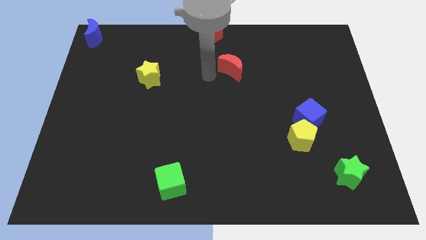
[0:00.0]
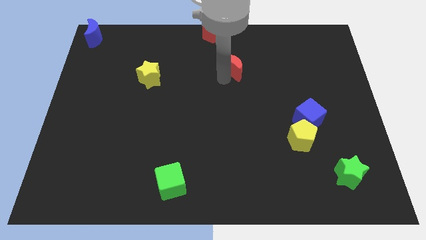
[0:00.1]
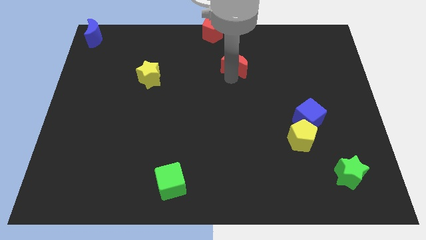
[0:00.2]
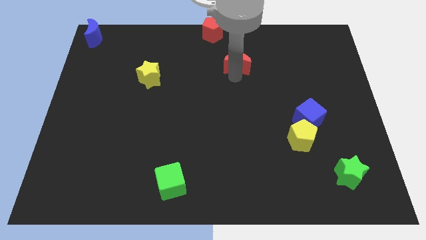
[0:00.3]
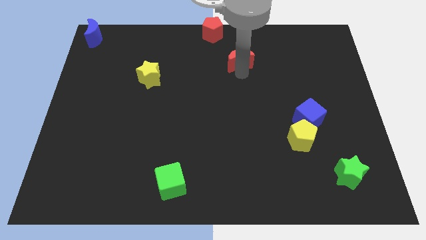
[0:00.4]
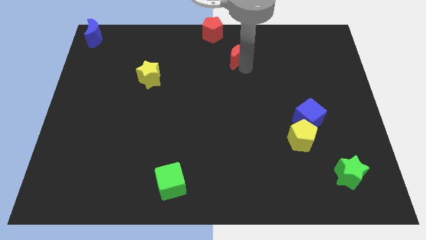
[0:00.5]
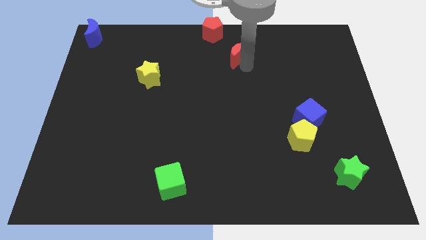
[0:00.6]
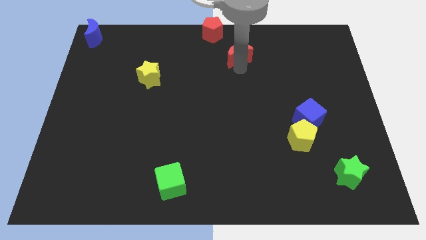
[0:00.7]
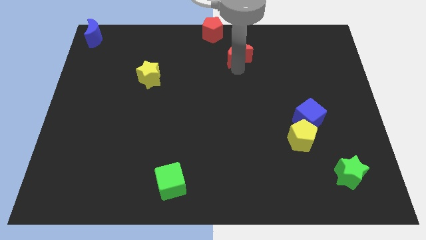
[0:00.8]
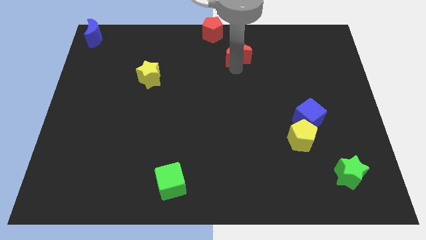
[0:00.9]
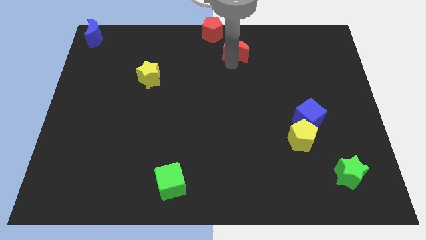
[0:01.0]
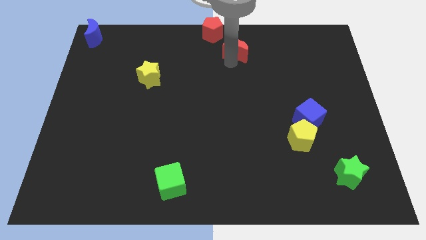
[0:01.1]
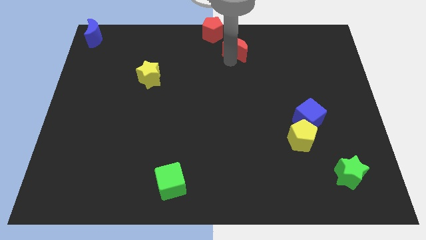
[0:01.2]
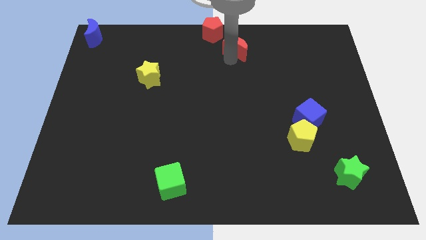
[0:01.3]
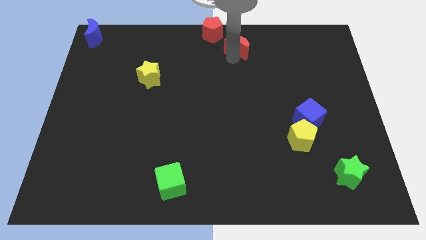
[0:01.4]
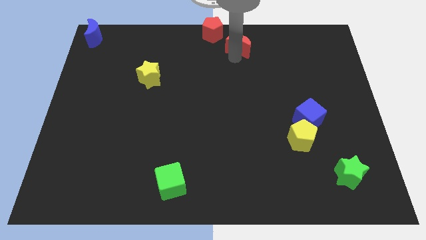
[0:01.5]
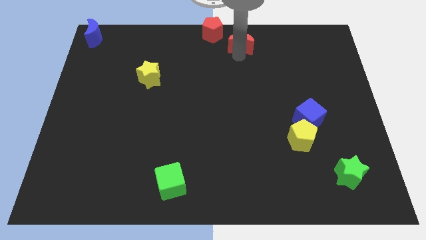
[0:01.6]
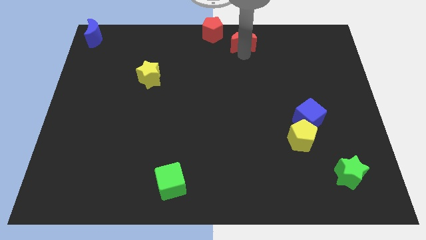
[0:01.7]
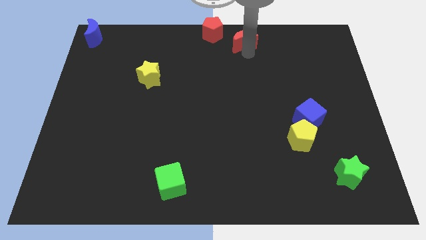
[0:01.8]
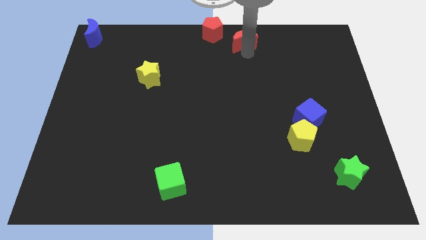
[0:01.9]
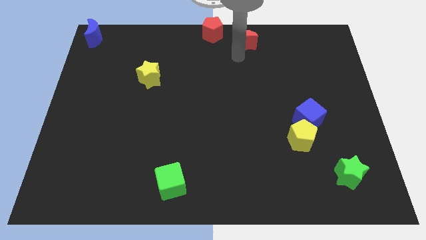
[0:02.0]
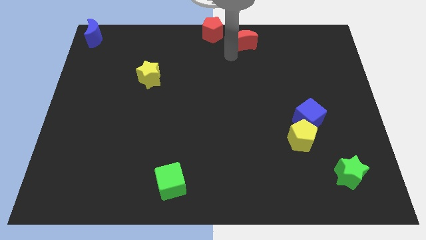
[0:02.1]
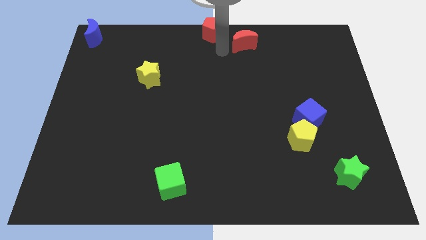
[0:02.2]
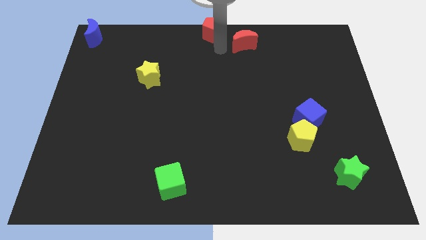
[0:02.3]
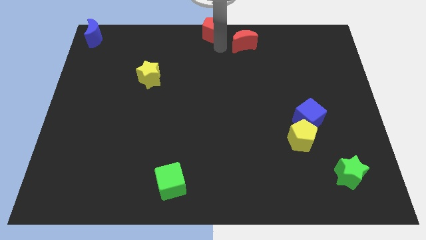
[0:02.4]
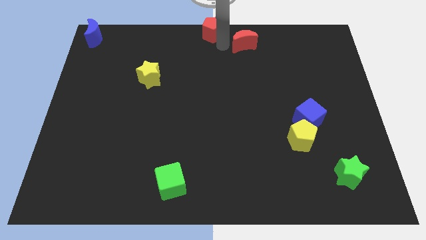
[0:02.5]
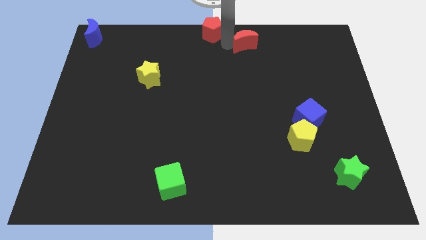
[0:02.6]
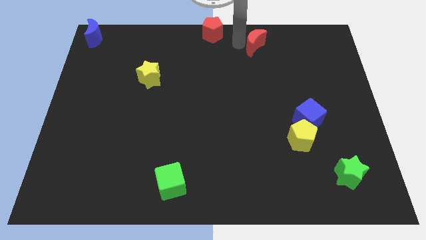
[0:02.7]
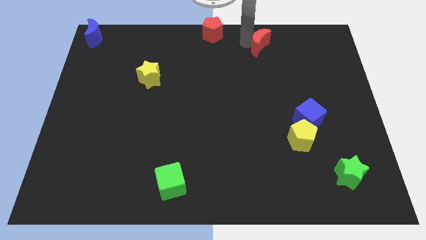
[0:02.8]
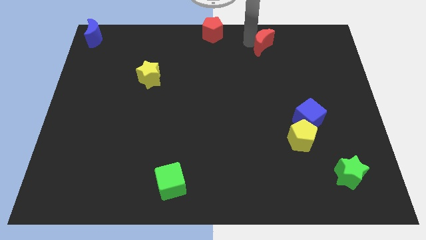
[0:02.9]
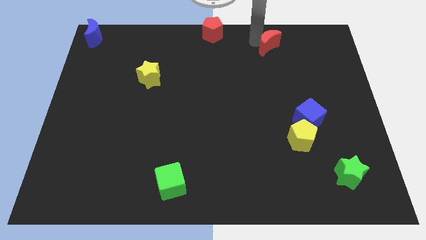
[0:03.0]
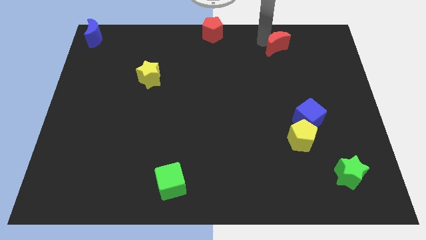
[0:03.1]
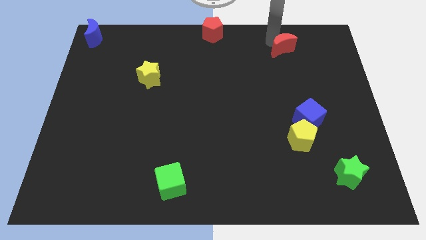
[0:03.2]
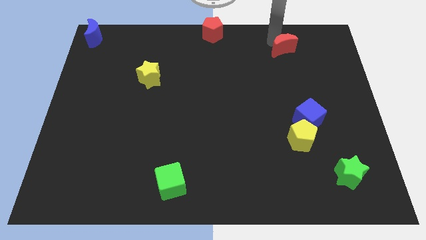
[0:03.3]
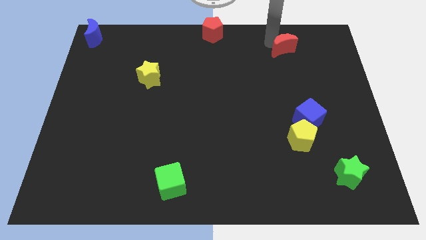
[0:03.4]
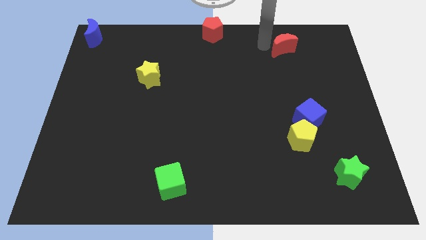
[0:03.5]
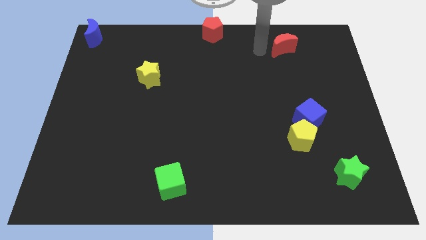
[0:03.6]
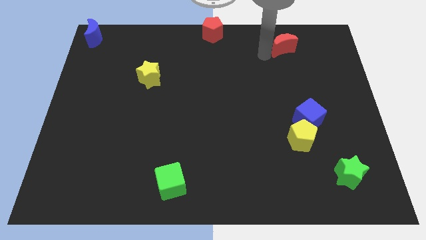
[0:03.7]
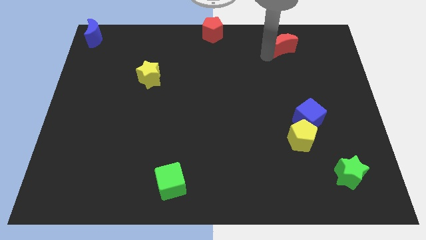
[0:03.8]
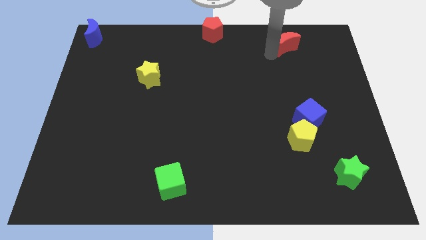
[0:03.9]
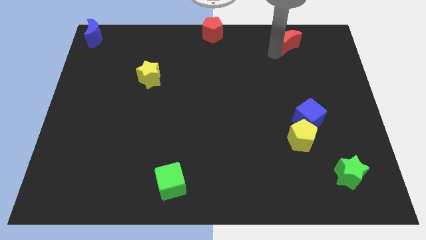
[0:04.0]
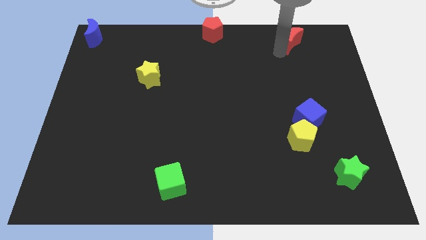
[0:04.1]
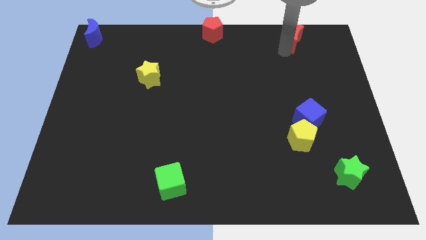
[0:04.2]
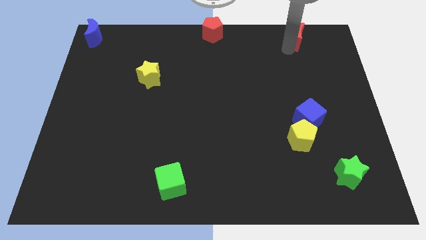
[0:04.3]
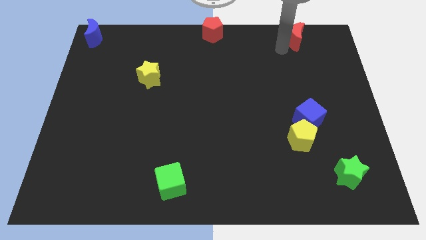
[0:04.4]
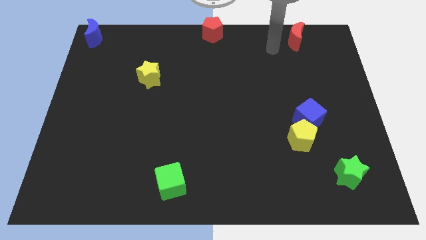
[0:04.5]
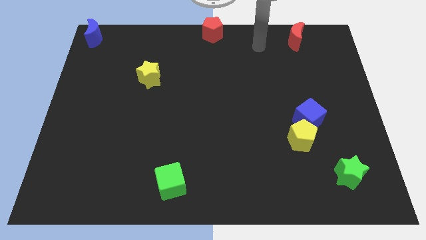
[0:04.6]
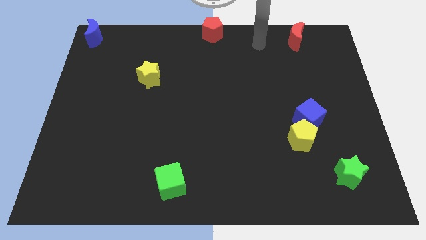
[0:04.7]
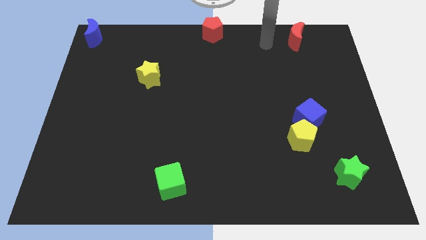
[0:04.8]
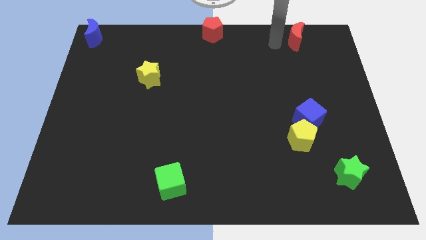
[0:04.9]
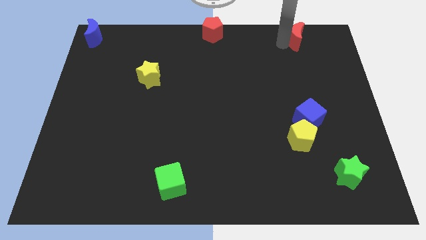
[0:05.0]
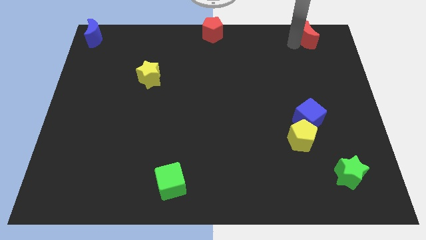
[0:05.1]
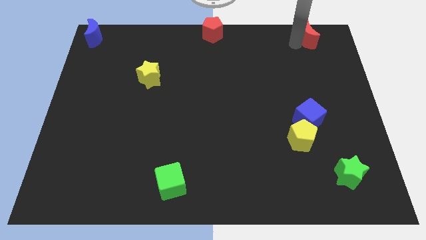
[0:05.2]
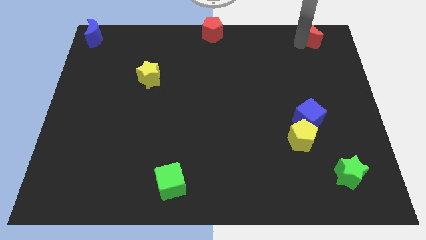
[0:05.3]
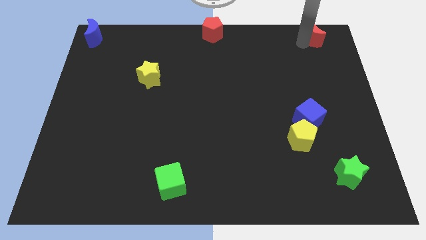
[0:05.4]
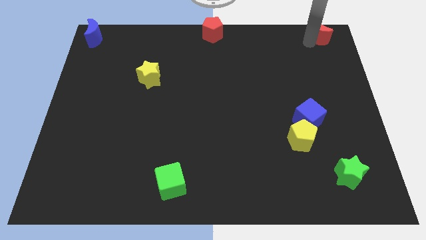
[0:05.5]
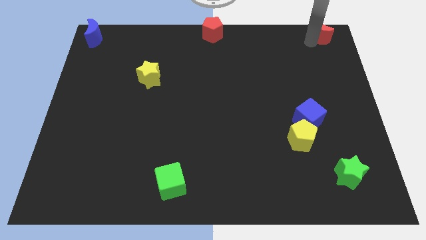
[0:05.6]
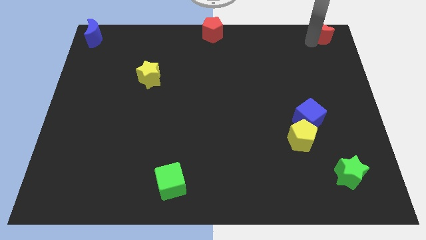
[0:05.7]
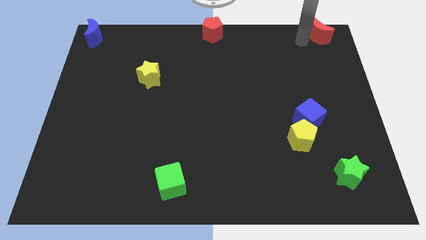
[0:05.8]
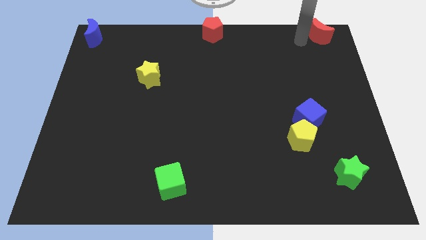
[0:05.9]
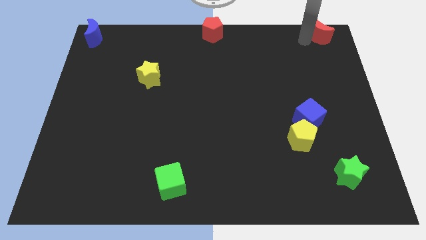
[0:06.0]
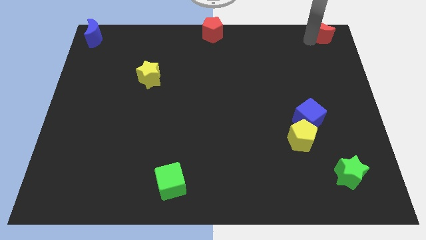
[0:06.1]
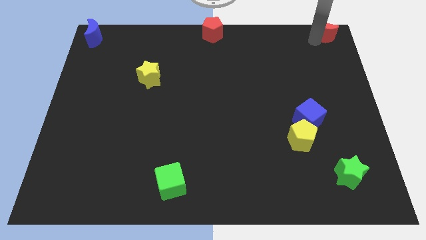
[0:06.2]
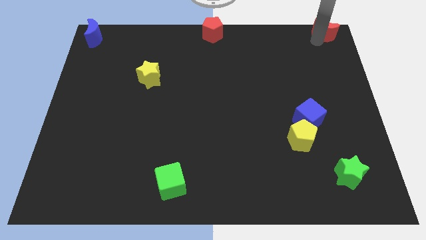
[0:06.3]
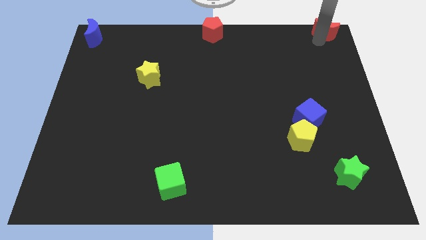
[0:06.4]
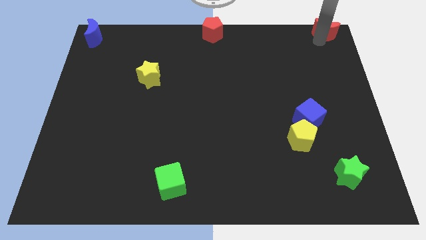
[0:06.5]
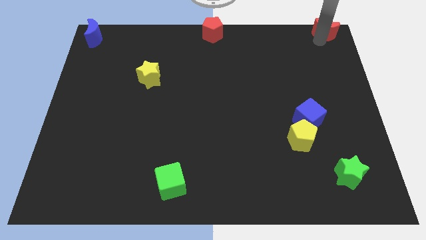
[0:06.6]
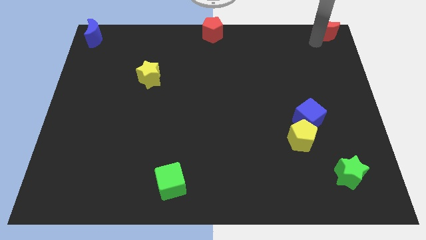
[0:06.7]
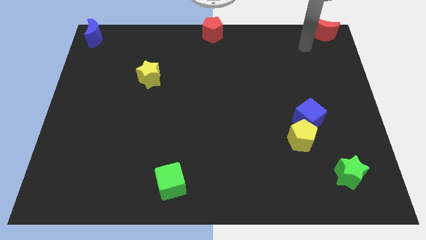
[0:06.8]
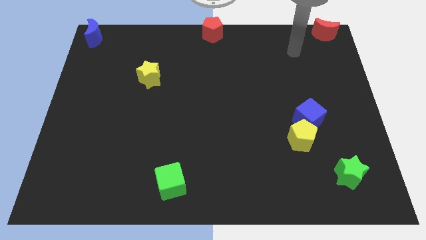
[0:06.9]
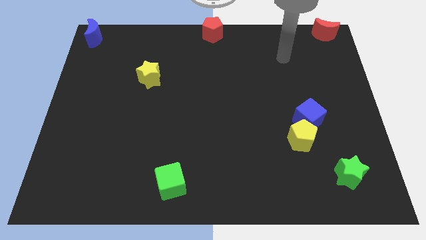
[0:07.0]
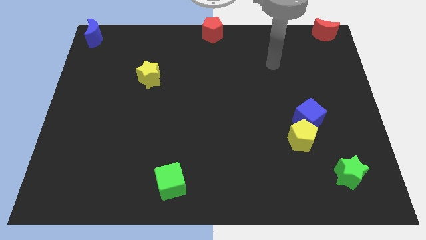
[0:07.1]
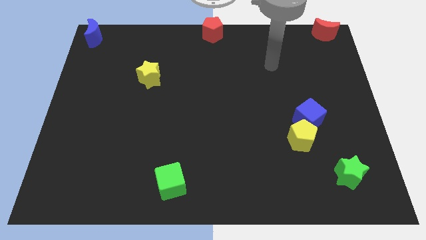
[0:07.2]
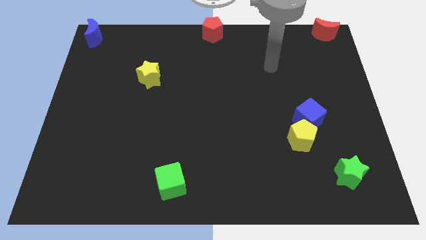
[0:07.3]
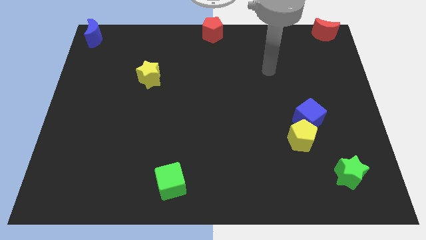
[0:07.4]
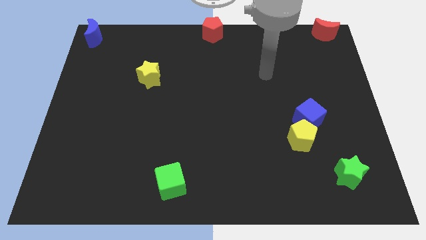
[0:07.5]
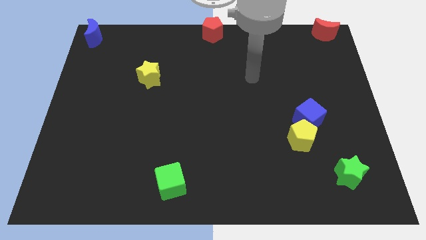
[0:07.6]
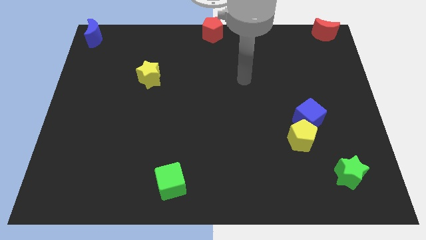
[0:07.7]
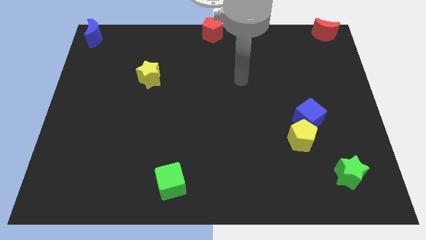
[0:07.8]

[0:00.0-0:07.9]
move red moon to the top right corner

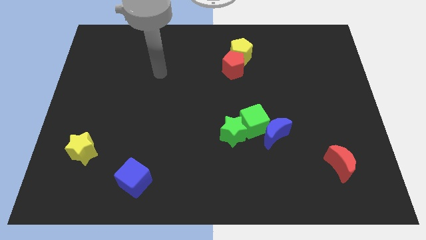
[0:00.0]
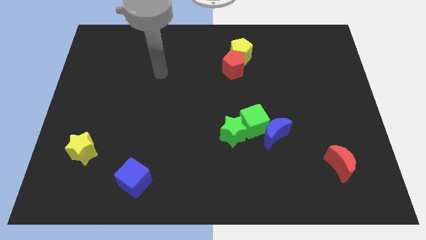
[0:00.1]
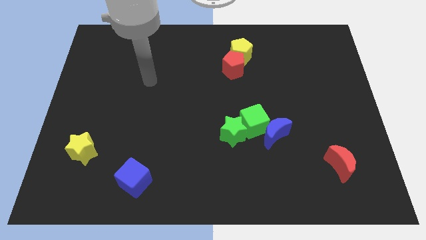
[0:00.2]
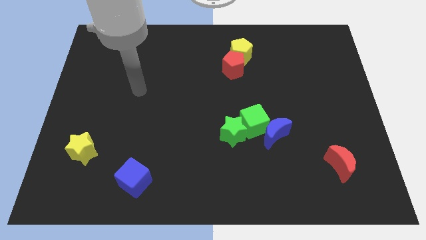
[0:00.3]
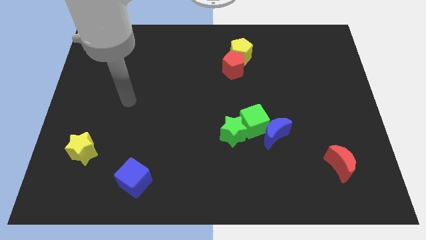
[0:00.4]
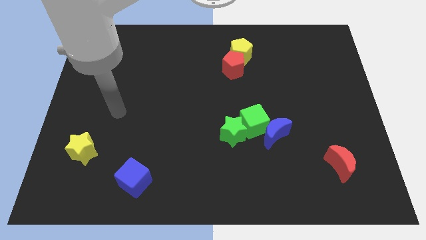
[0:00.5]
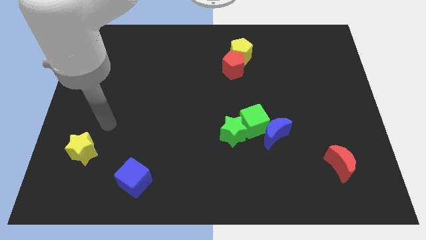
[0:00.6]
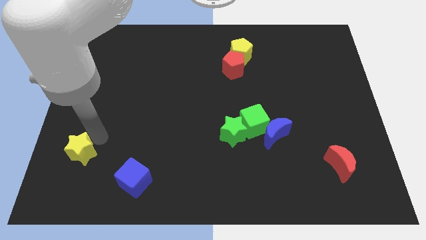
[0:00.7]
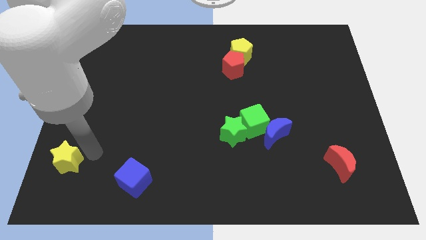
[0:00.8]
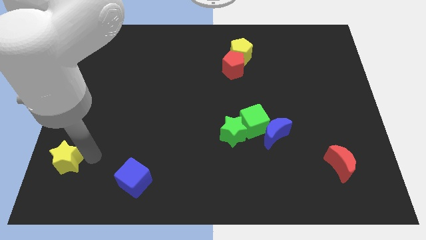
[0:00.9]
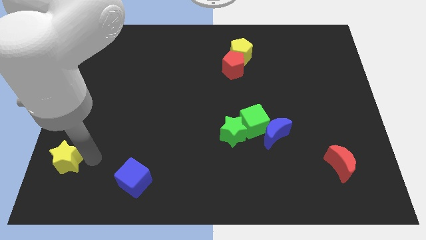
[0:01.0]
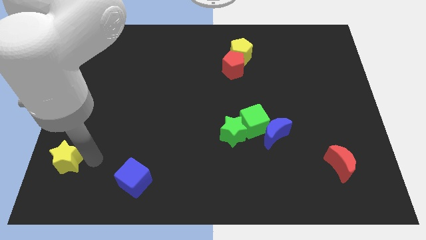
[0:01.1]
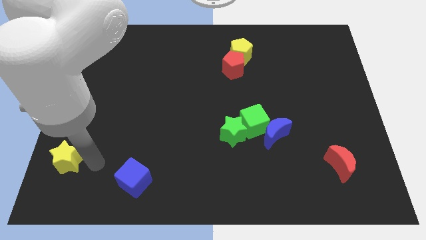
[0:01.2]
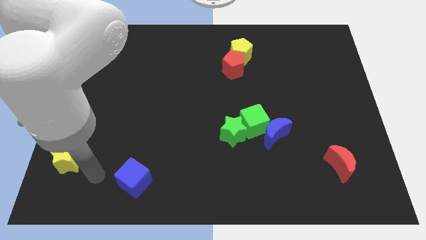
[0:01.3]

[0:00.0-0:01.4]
slightly move the the yellow star to the bottom
